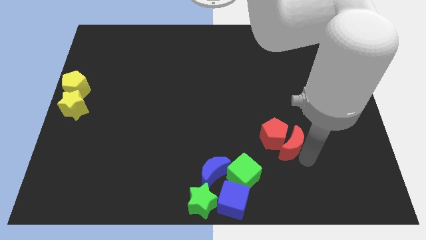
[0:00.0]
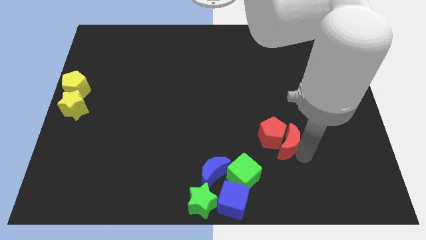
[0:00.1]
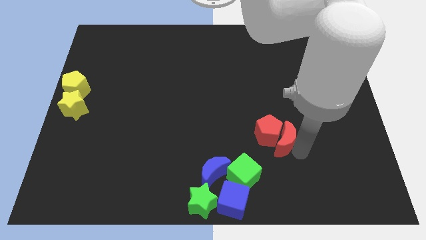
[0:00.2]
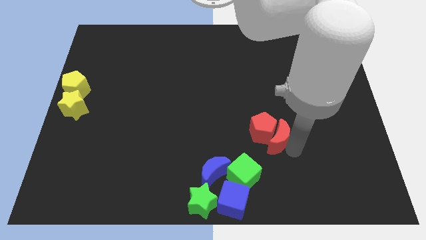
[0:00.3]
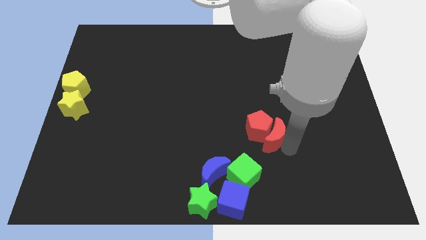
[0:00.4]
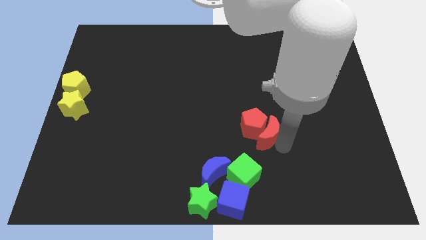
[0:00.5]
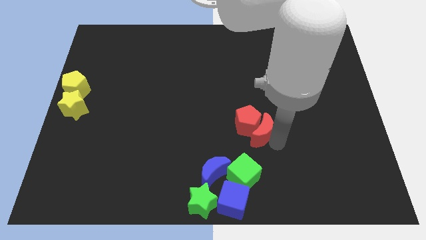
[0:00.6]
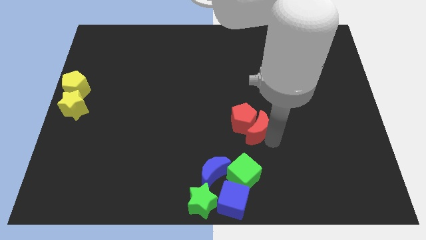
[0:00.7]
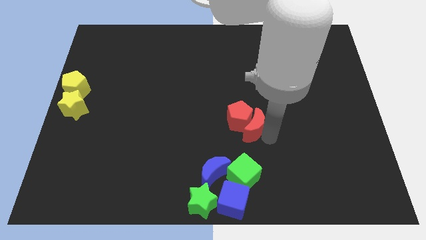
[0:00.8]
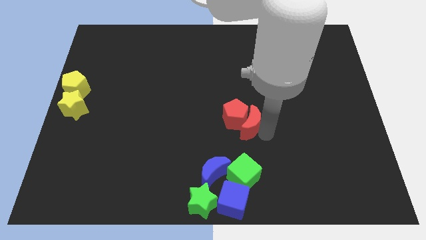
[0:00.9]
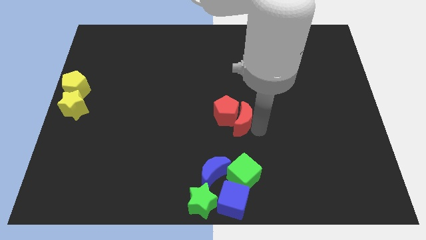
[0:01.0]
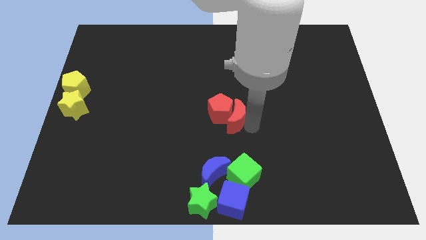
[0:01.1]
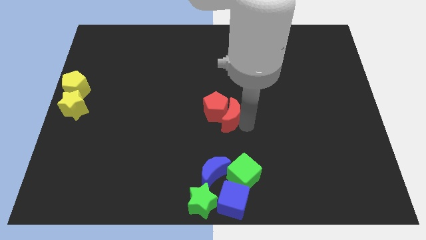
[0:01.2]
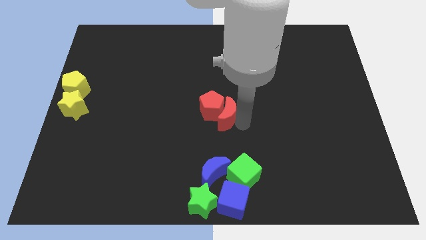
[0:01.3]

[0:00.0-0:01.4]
move the red moon and the red pentagon to the center of the board

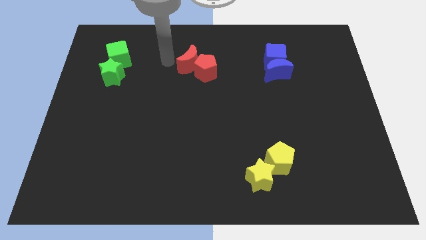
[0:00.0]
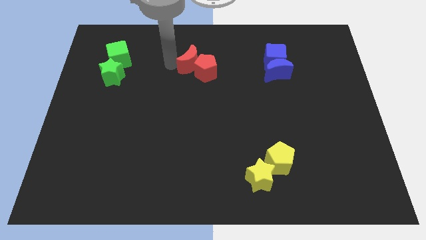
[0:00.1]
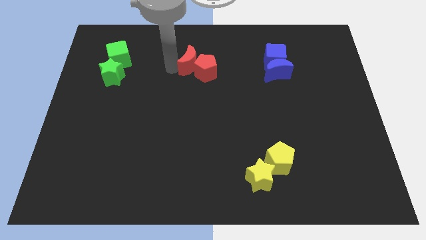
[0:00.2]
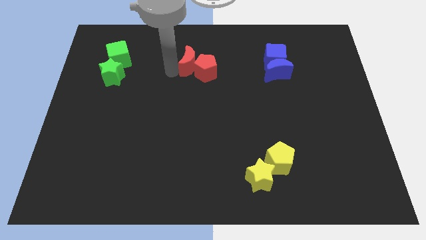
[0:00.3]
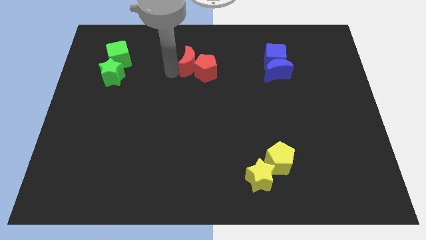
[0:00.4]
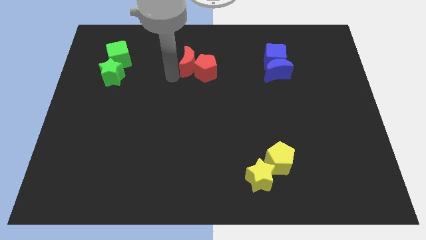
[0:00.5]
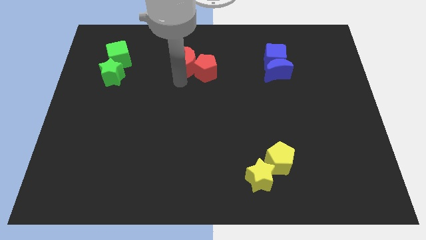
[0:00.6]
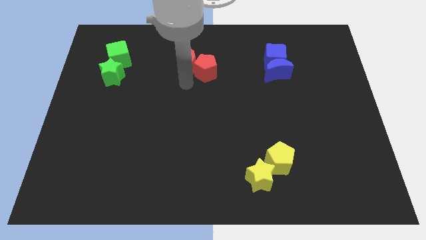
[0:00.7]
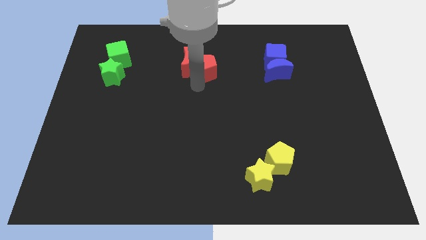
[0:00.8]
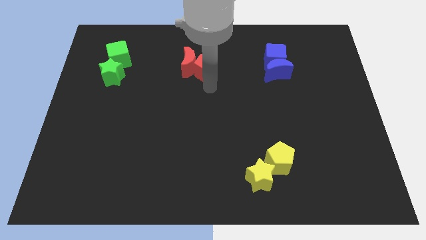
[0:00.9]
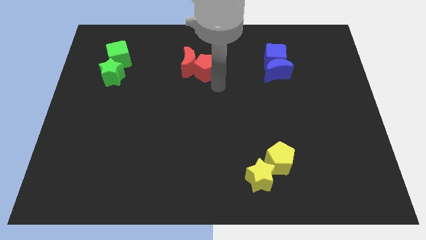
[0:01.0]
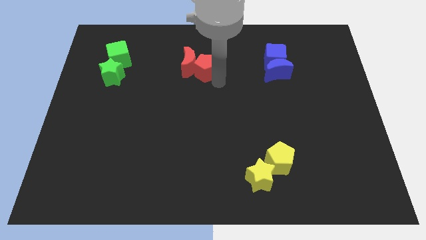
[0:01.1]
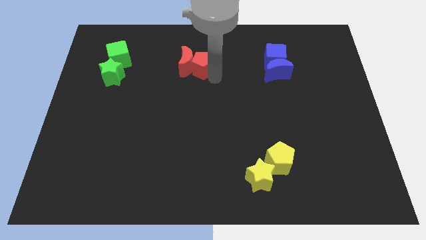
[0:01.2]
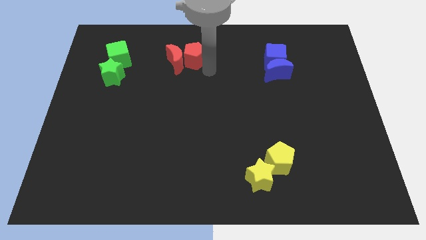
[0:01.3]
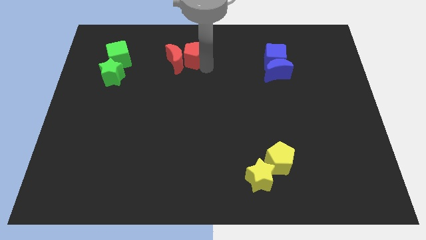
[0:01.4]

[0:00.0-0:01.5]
drag the red crescent and red pentagon towards the green cube and green star

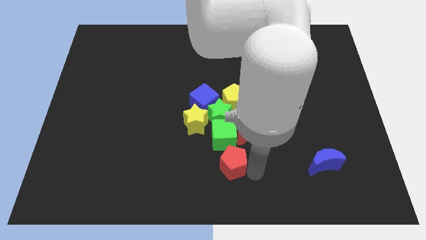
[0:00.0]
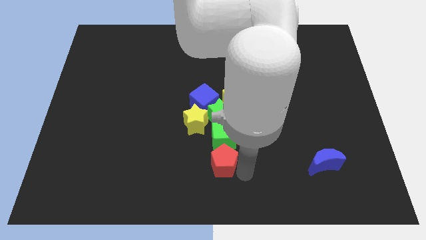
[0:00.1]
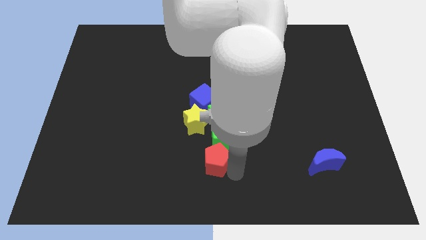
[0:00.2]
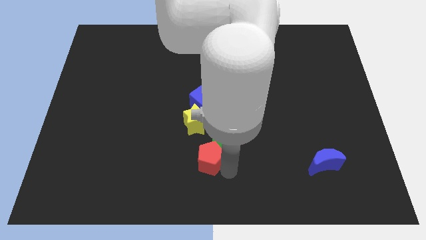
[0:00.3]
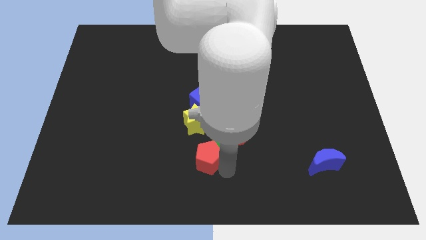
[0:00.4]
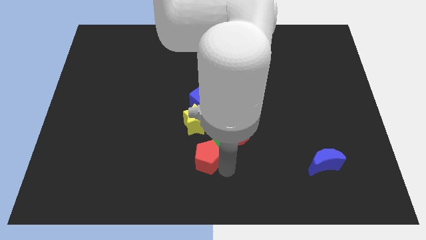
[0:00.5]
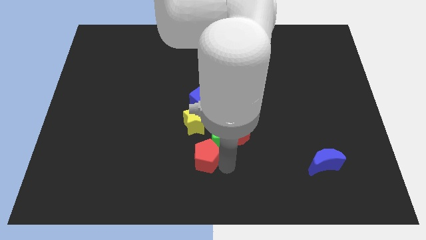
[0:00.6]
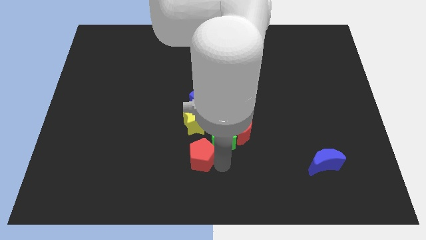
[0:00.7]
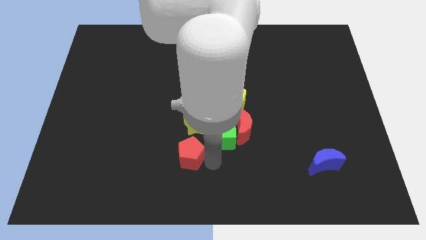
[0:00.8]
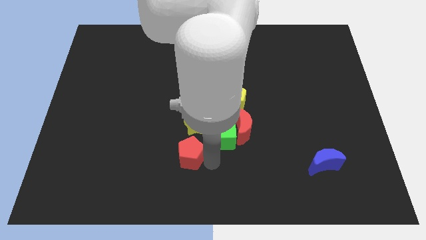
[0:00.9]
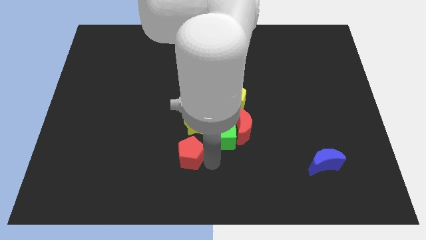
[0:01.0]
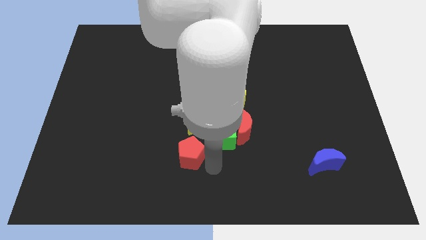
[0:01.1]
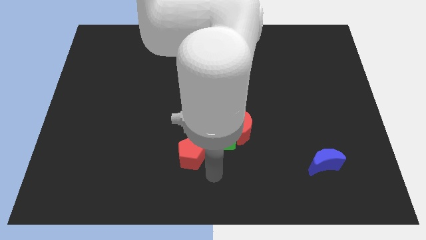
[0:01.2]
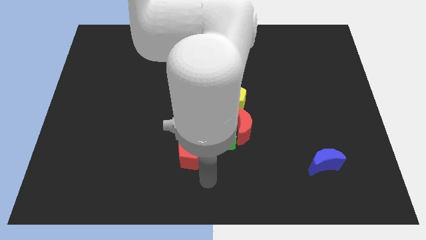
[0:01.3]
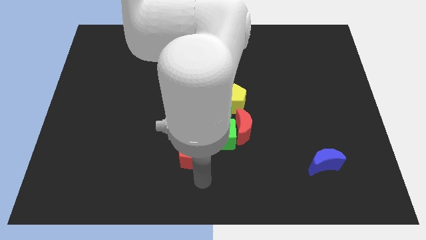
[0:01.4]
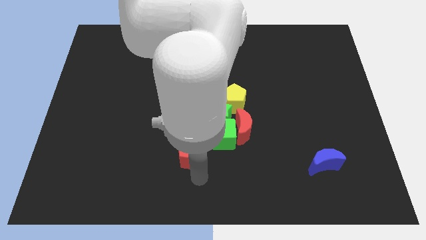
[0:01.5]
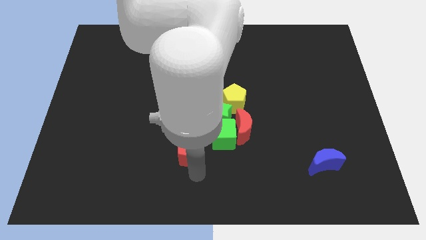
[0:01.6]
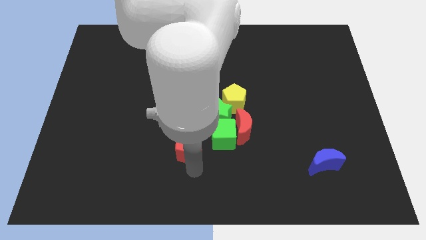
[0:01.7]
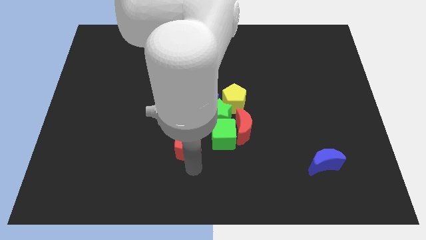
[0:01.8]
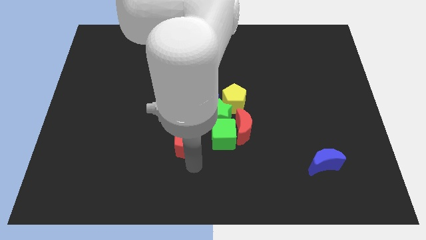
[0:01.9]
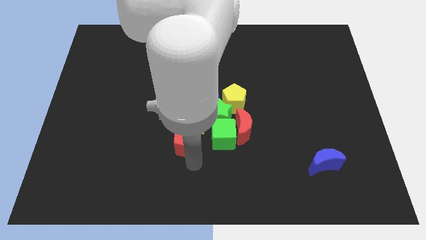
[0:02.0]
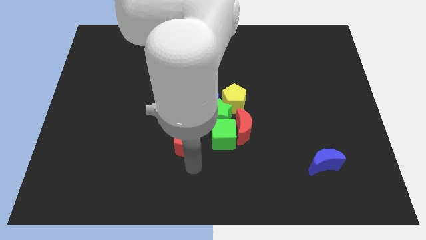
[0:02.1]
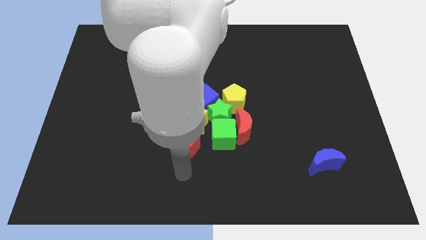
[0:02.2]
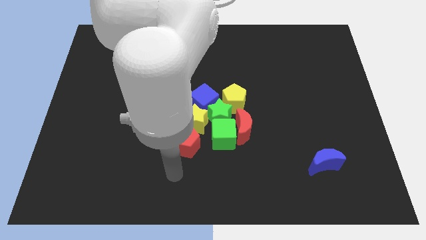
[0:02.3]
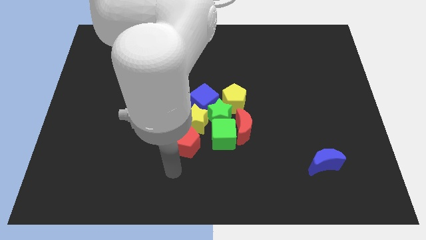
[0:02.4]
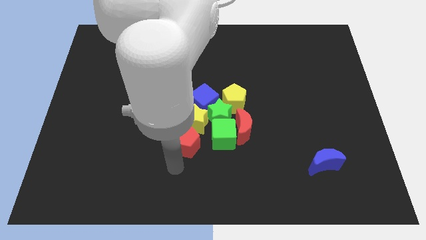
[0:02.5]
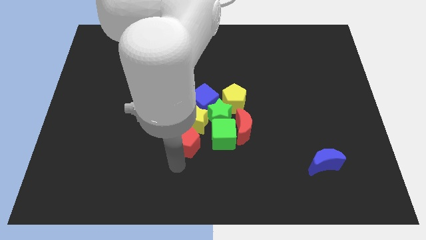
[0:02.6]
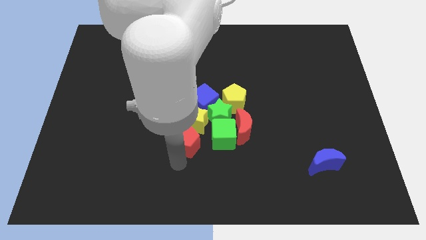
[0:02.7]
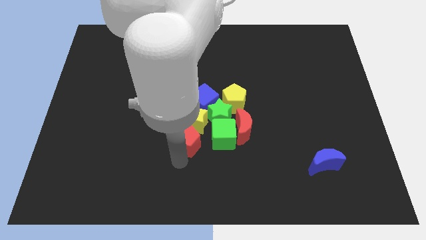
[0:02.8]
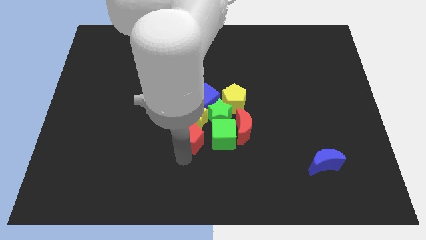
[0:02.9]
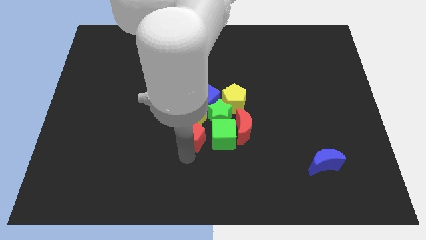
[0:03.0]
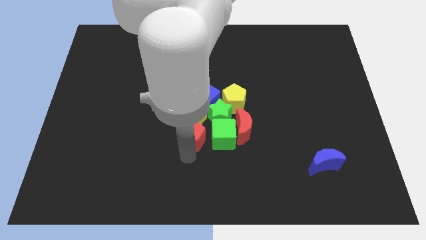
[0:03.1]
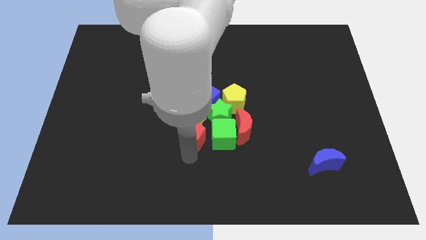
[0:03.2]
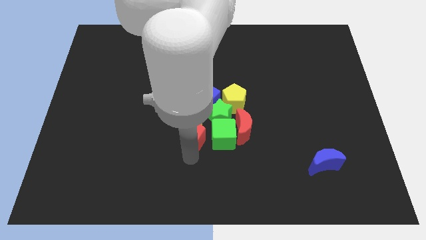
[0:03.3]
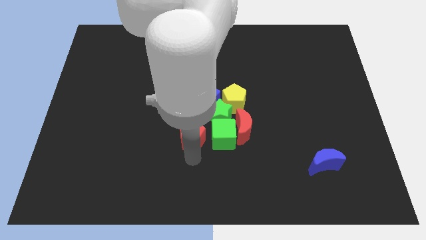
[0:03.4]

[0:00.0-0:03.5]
push the red pentagon into the yellow star

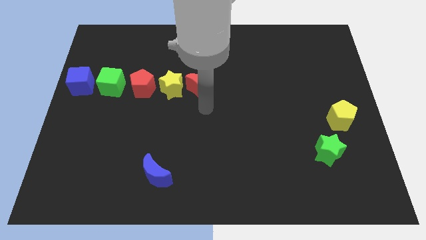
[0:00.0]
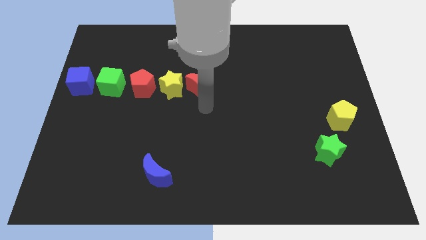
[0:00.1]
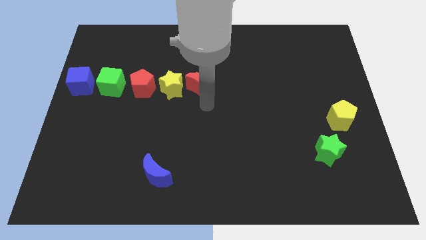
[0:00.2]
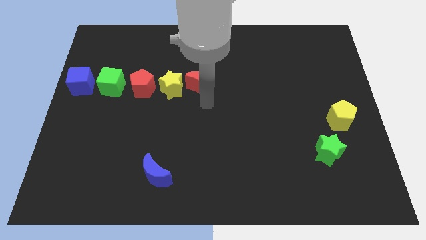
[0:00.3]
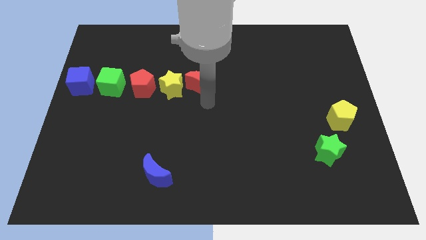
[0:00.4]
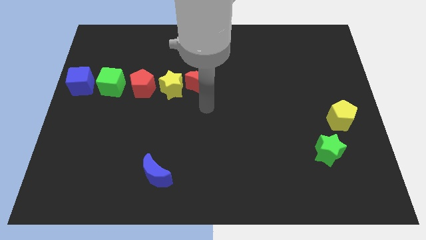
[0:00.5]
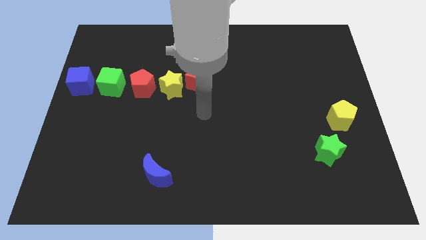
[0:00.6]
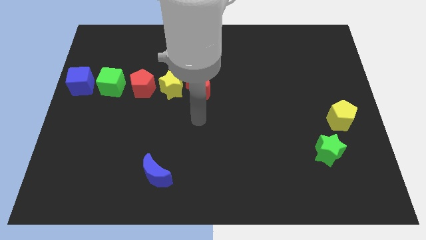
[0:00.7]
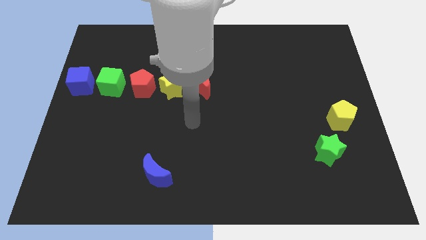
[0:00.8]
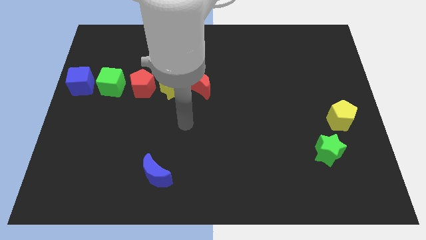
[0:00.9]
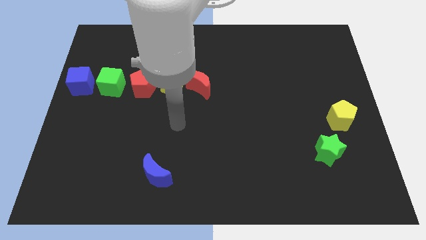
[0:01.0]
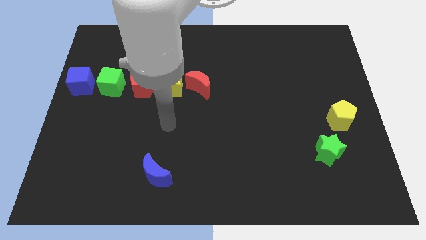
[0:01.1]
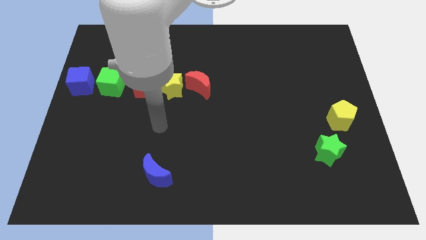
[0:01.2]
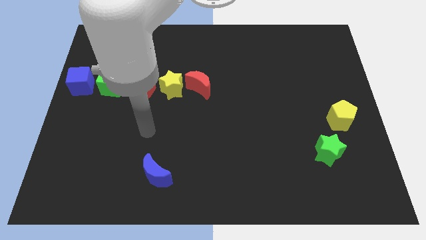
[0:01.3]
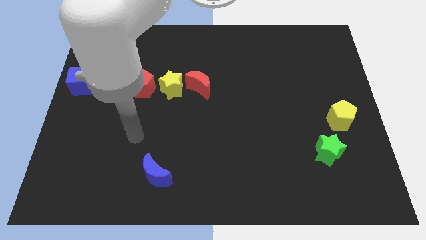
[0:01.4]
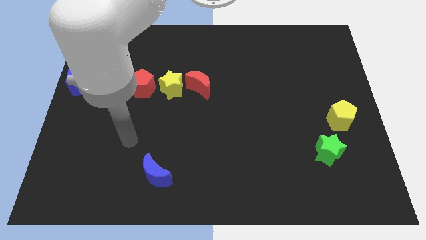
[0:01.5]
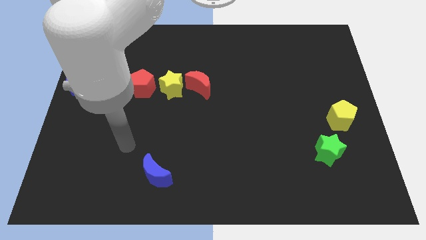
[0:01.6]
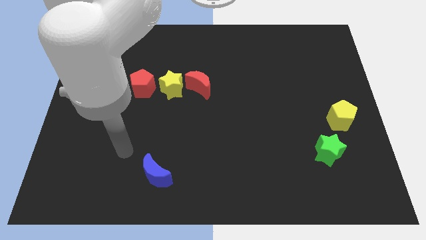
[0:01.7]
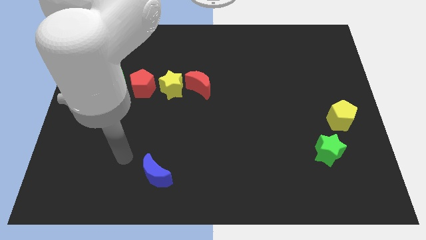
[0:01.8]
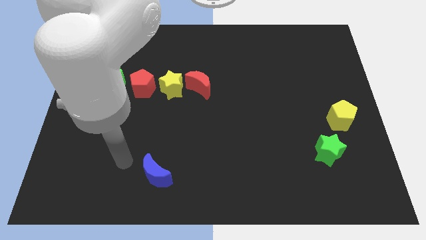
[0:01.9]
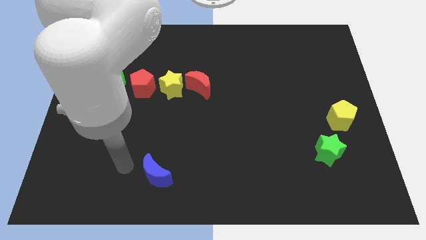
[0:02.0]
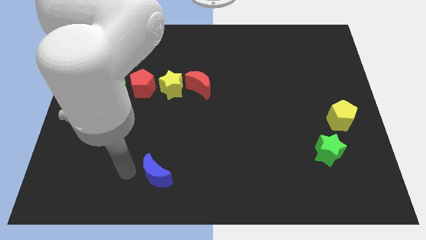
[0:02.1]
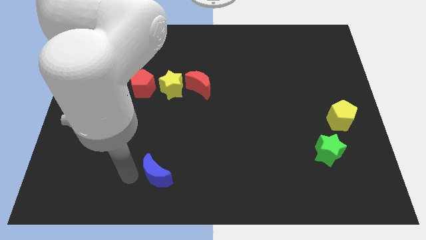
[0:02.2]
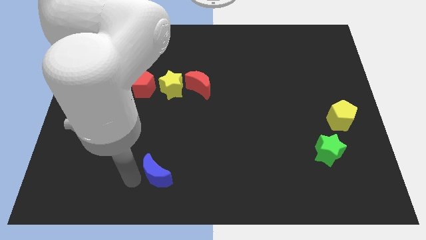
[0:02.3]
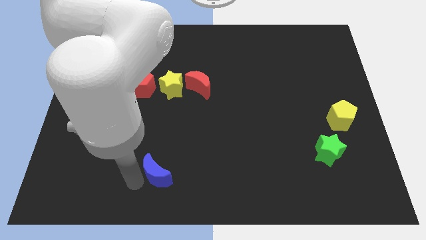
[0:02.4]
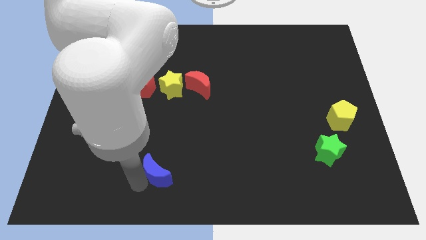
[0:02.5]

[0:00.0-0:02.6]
touch the left side of the blue crescent
